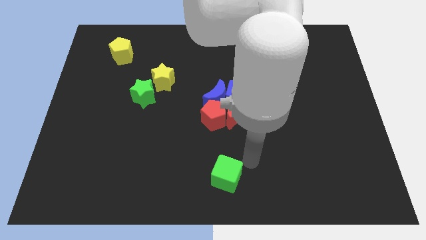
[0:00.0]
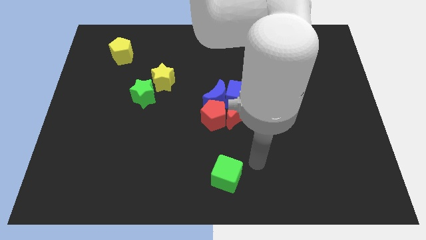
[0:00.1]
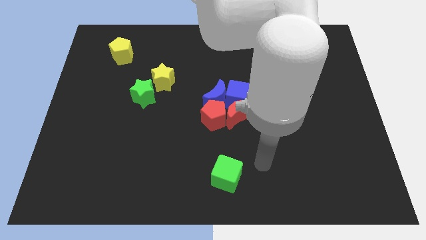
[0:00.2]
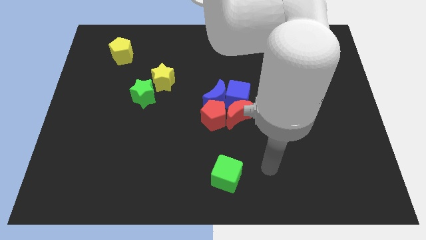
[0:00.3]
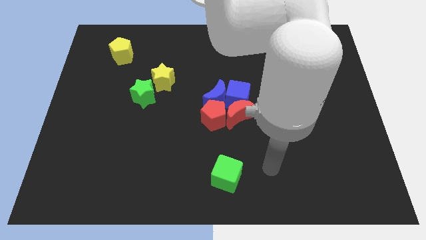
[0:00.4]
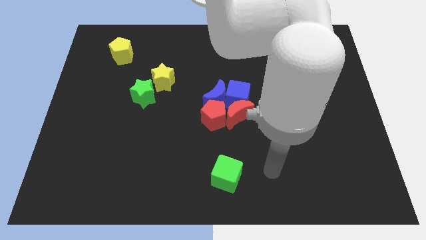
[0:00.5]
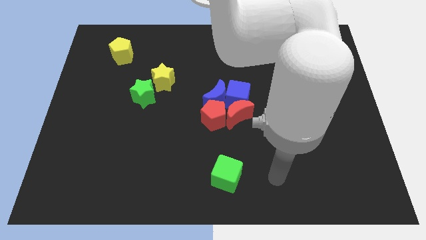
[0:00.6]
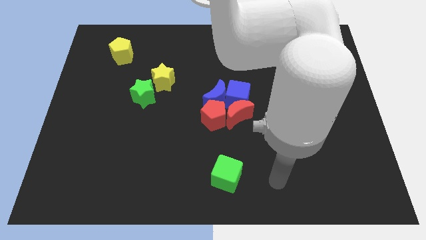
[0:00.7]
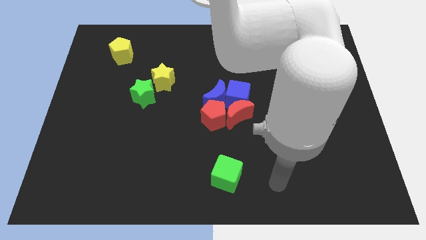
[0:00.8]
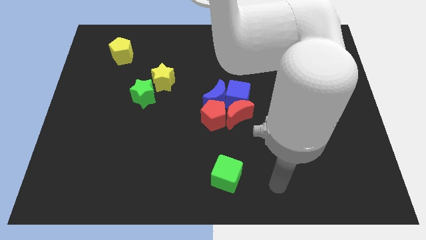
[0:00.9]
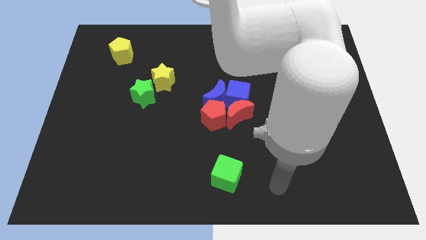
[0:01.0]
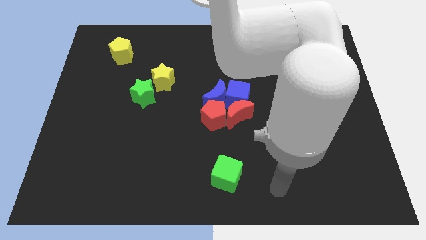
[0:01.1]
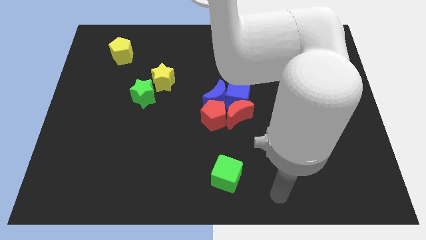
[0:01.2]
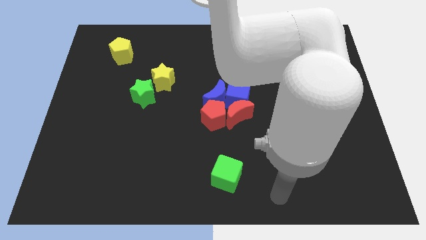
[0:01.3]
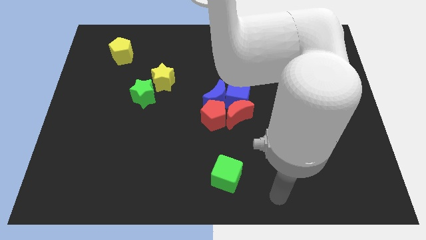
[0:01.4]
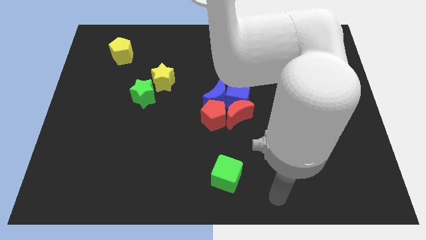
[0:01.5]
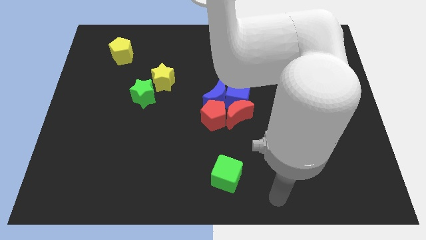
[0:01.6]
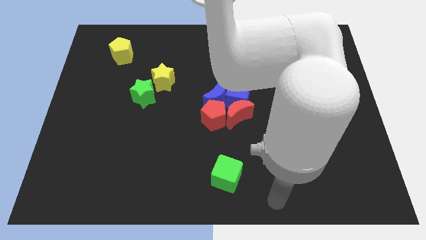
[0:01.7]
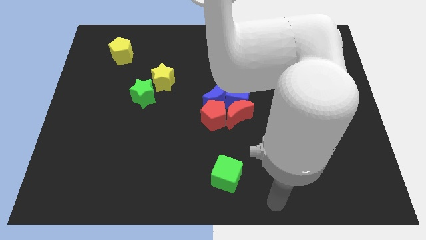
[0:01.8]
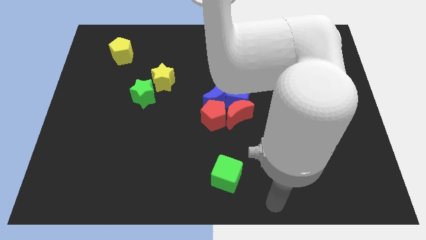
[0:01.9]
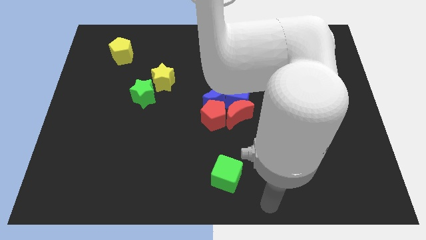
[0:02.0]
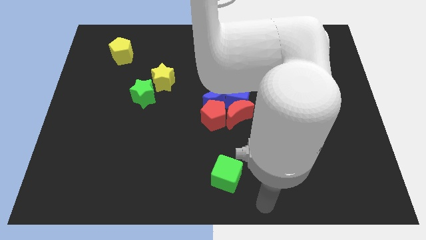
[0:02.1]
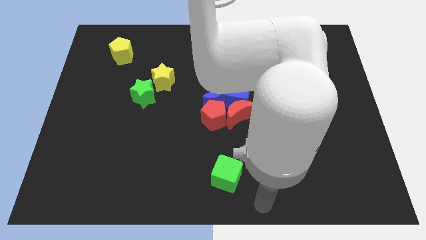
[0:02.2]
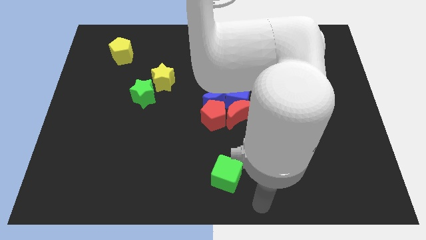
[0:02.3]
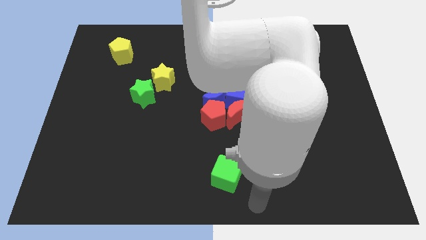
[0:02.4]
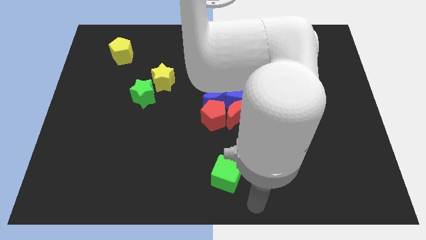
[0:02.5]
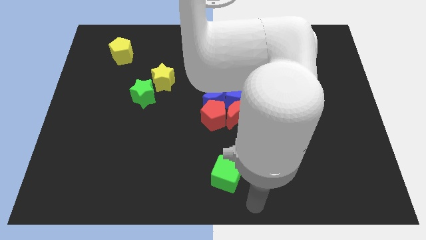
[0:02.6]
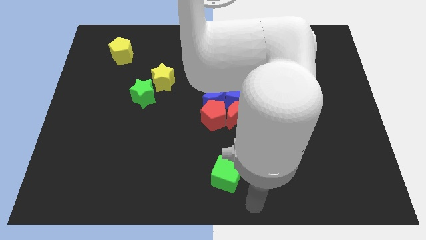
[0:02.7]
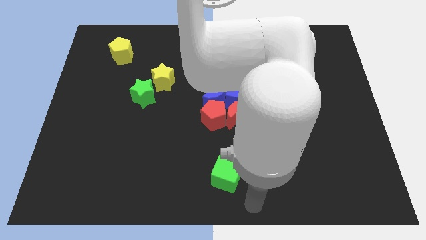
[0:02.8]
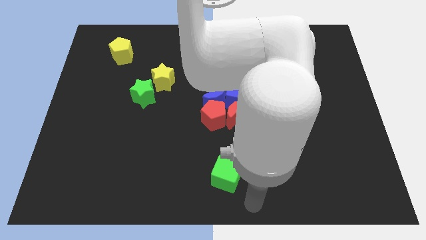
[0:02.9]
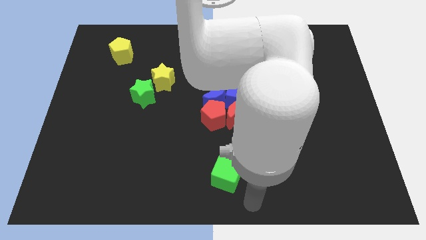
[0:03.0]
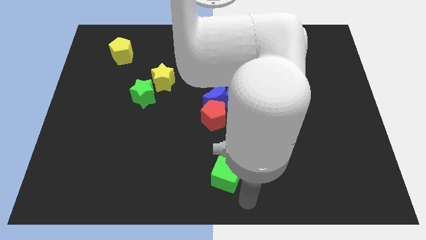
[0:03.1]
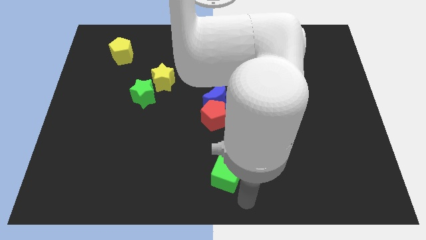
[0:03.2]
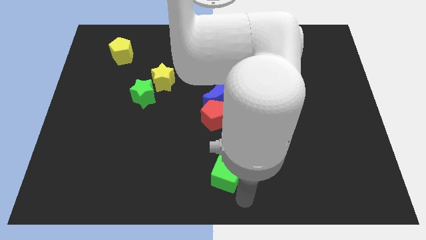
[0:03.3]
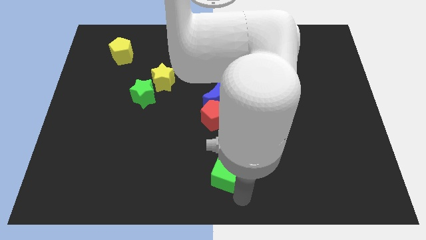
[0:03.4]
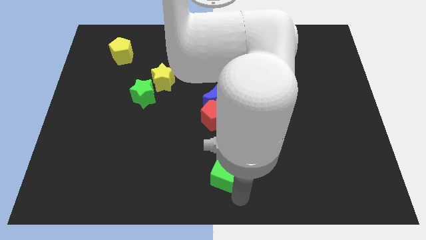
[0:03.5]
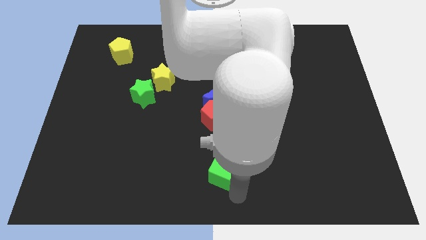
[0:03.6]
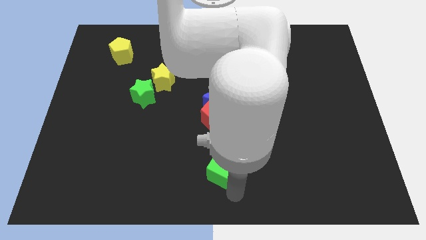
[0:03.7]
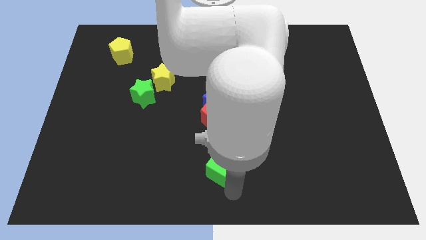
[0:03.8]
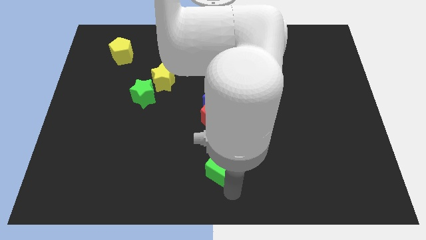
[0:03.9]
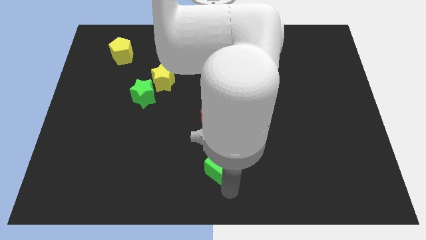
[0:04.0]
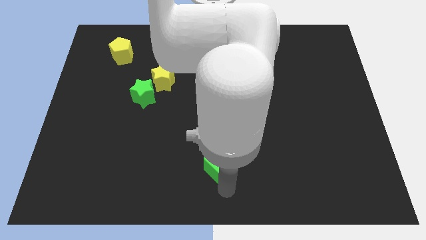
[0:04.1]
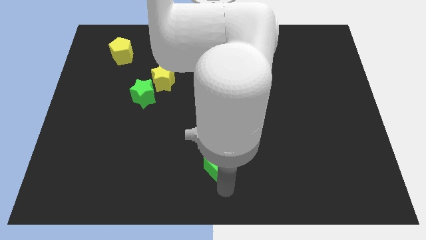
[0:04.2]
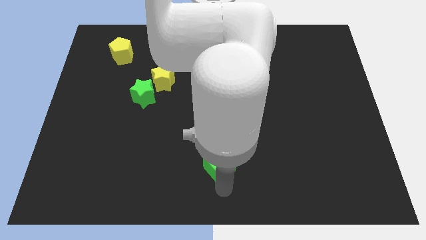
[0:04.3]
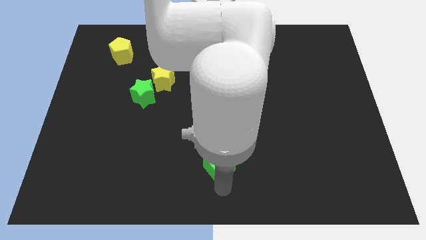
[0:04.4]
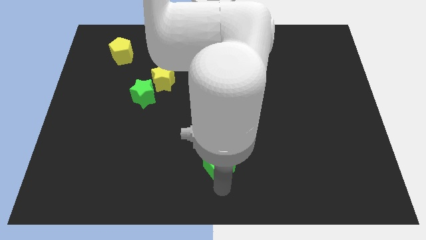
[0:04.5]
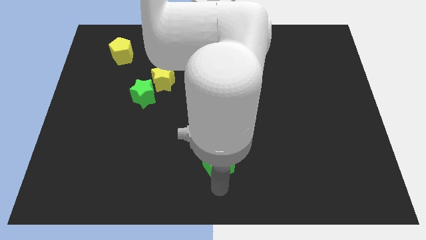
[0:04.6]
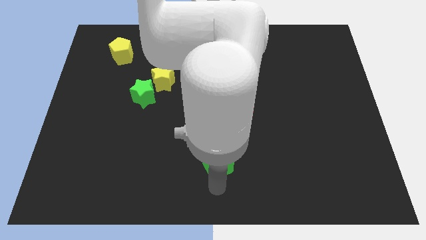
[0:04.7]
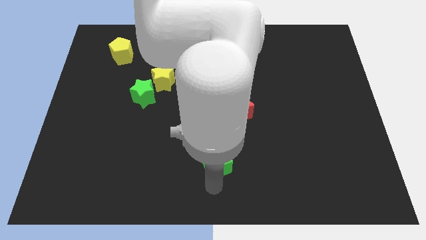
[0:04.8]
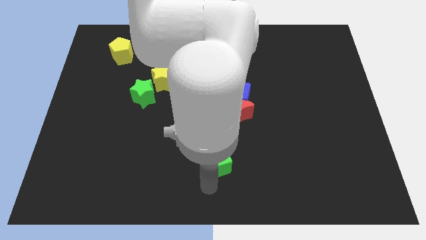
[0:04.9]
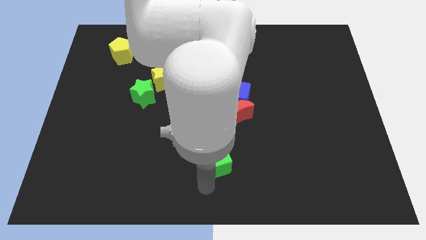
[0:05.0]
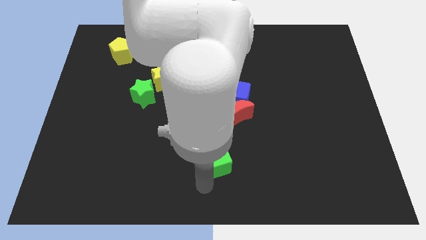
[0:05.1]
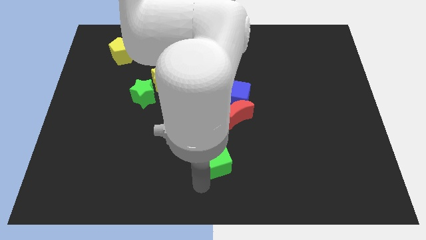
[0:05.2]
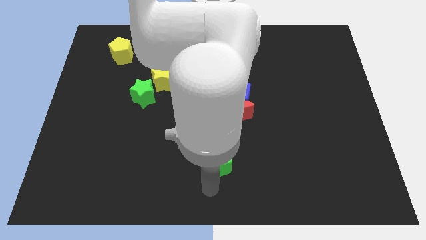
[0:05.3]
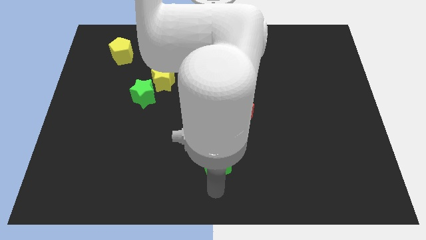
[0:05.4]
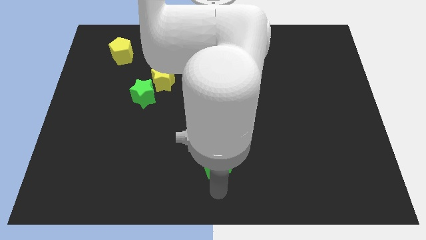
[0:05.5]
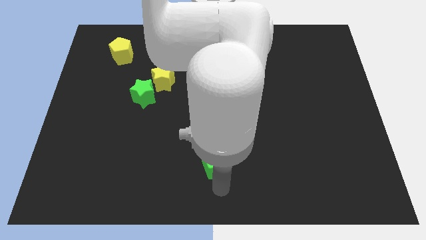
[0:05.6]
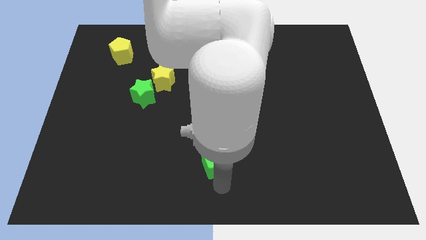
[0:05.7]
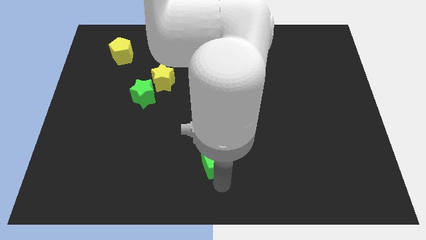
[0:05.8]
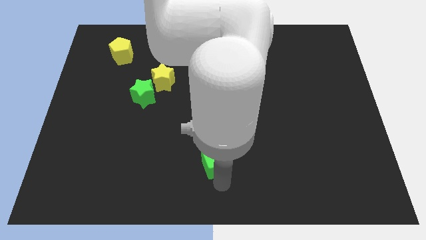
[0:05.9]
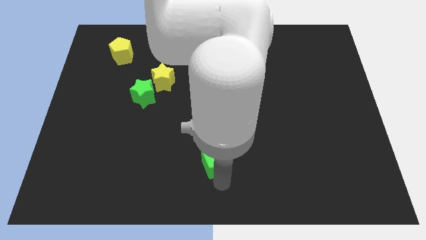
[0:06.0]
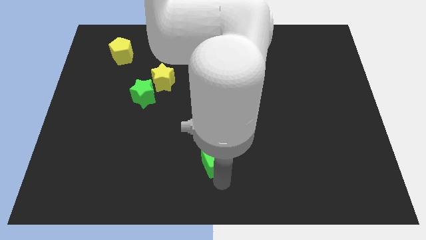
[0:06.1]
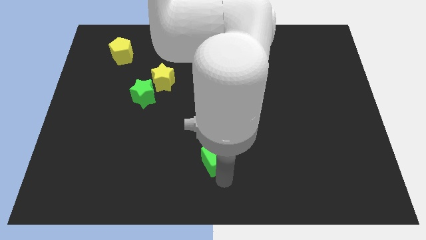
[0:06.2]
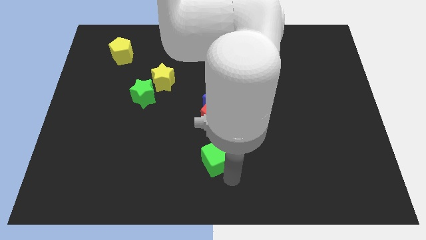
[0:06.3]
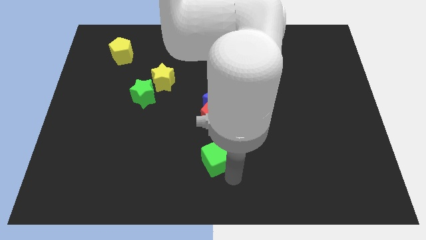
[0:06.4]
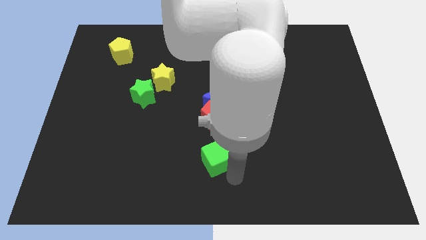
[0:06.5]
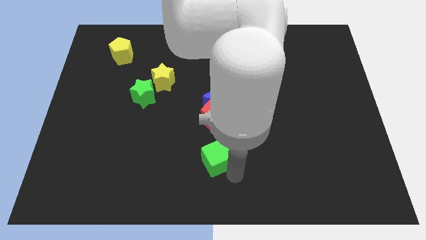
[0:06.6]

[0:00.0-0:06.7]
move the green cube to the top of the board

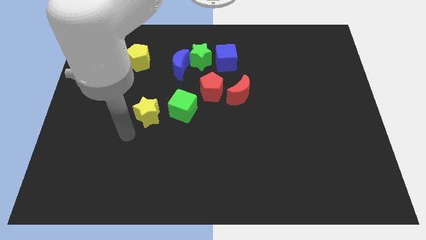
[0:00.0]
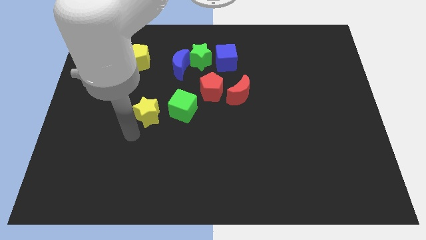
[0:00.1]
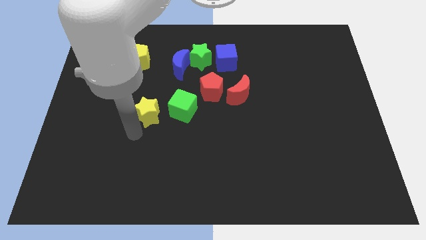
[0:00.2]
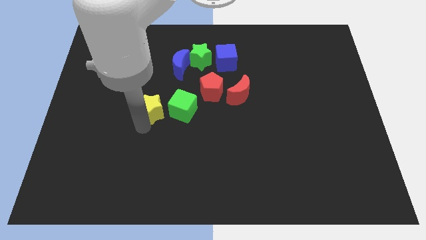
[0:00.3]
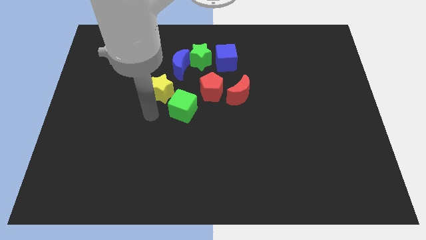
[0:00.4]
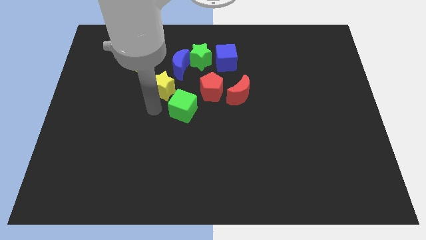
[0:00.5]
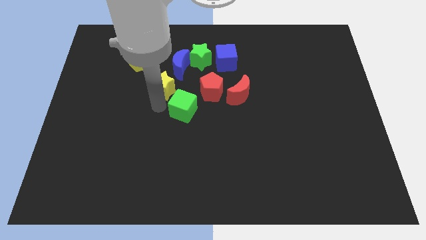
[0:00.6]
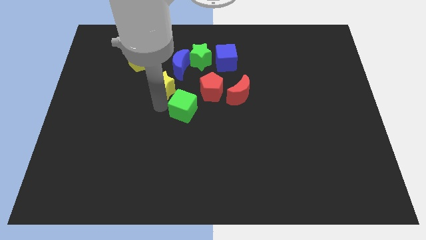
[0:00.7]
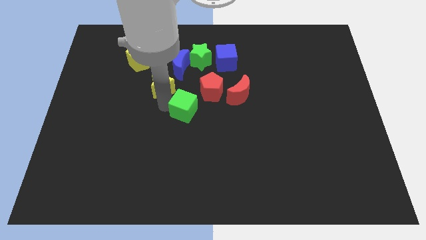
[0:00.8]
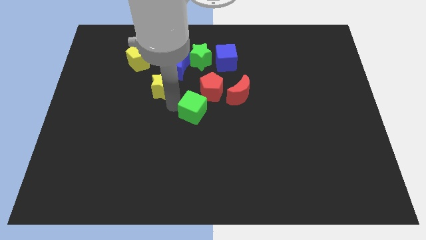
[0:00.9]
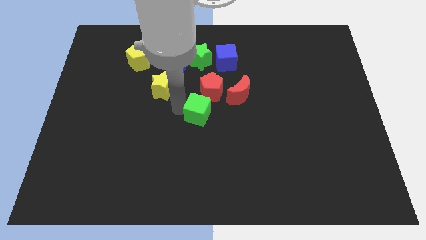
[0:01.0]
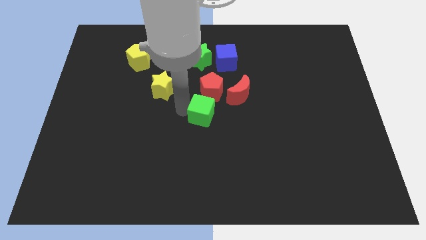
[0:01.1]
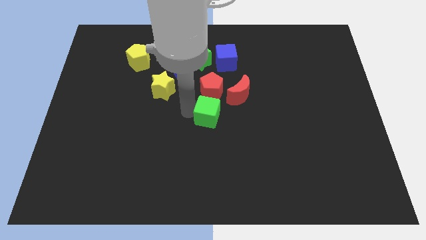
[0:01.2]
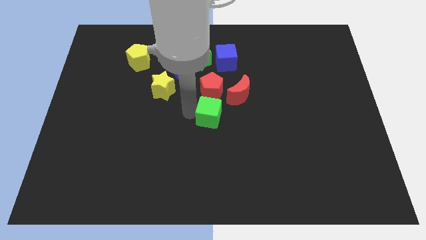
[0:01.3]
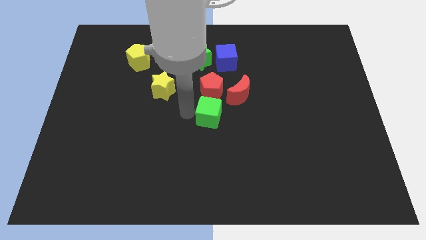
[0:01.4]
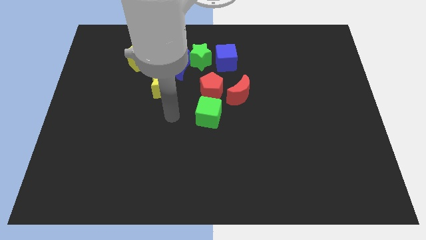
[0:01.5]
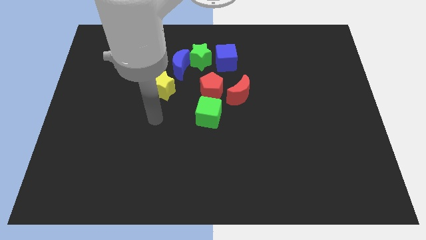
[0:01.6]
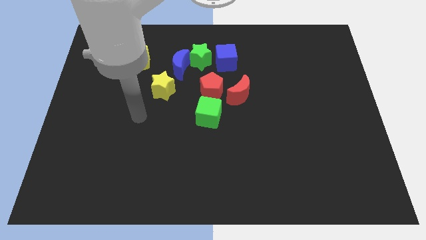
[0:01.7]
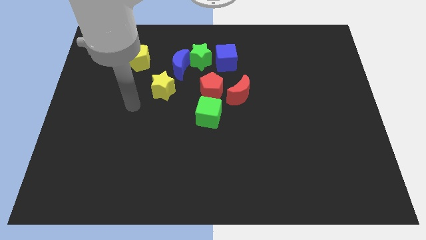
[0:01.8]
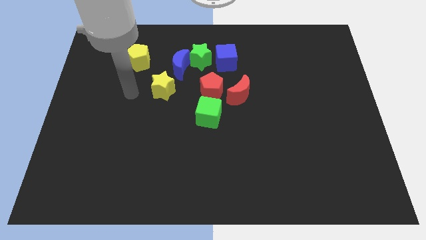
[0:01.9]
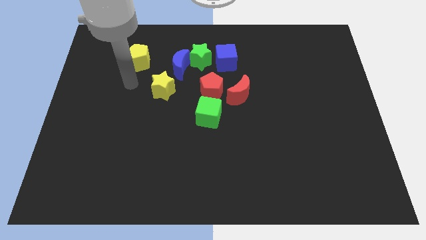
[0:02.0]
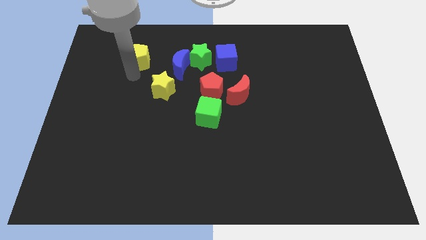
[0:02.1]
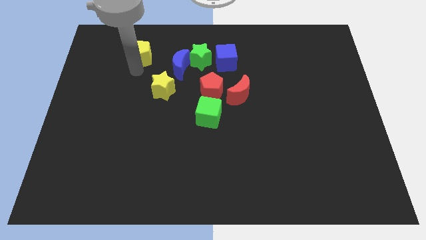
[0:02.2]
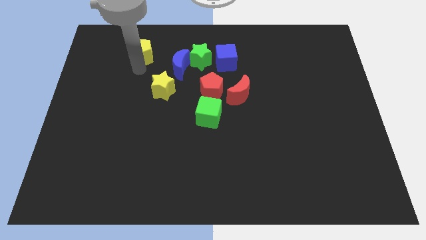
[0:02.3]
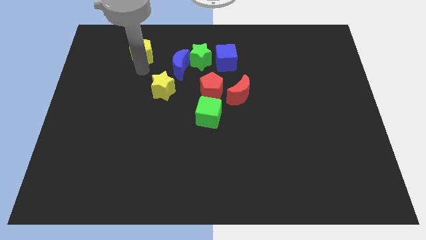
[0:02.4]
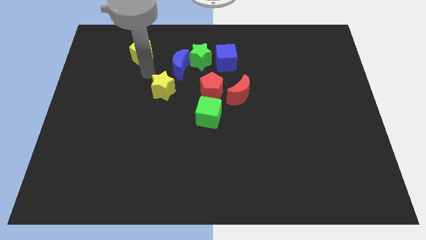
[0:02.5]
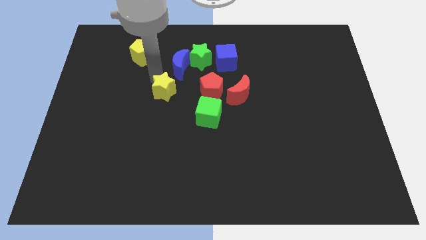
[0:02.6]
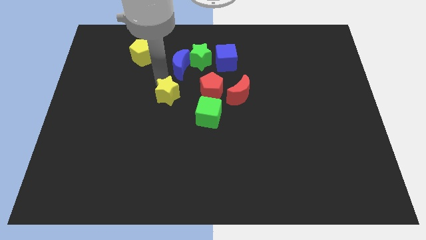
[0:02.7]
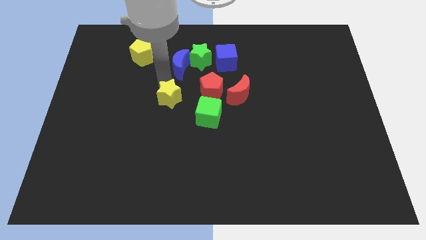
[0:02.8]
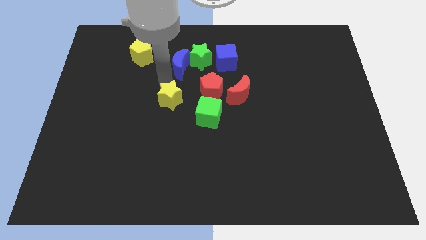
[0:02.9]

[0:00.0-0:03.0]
move yellow star below blue moon
